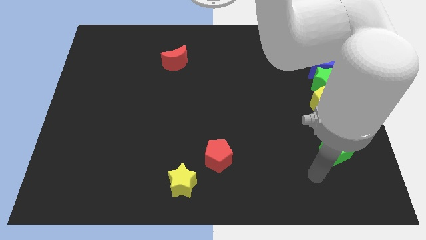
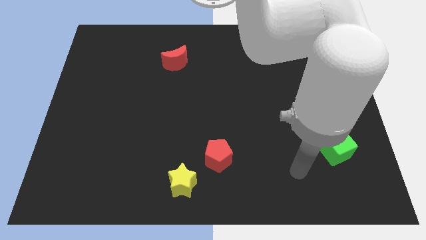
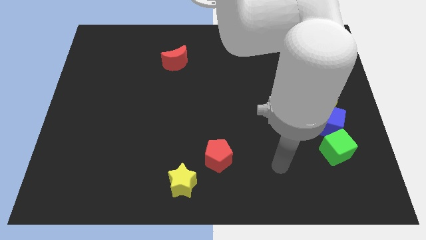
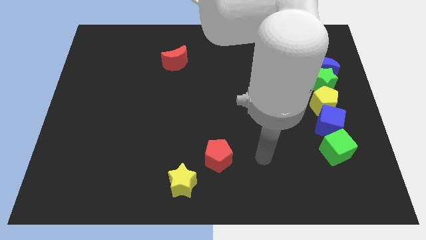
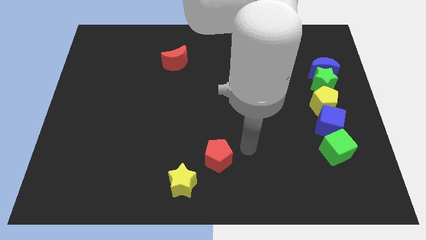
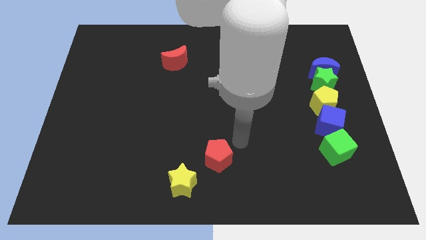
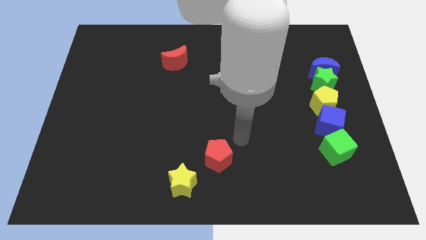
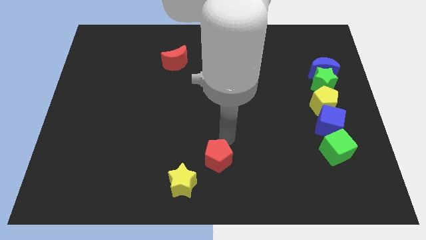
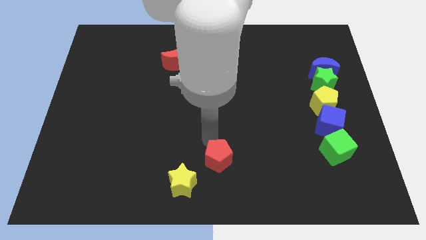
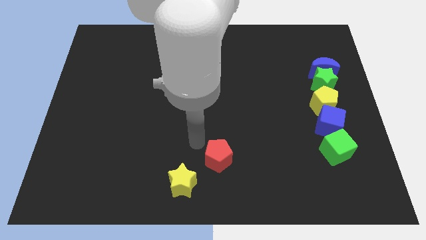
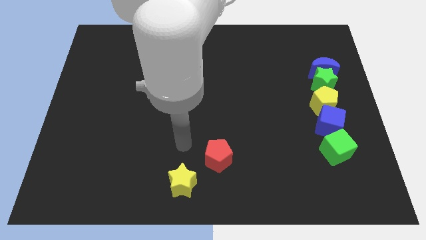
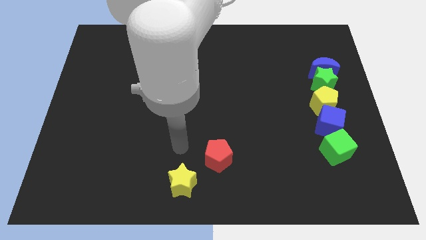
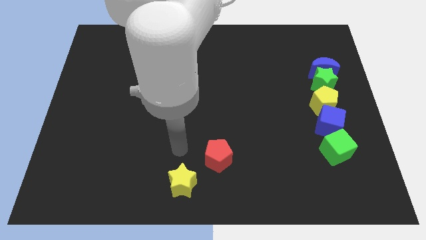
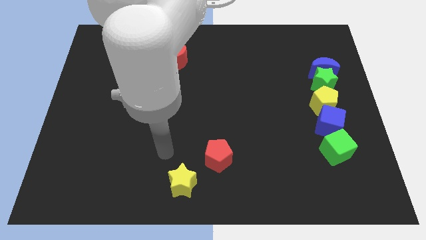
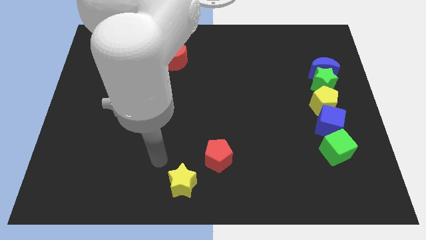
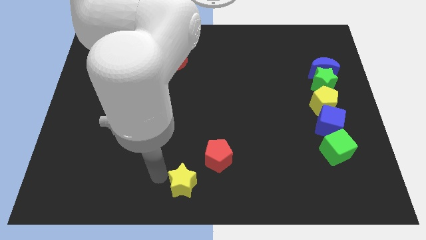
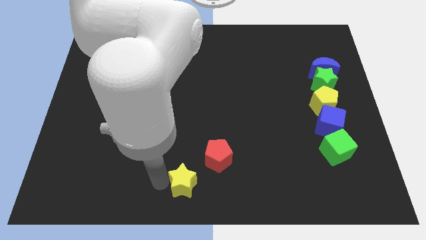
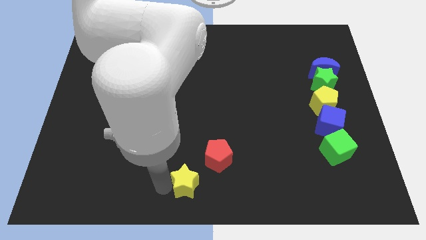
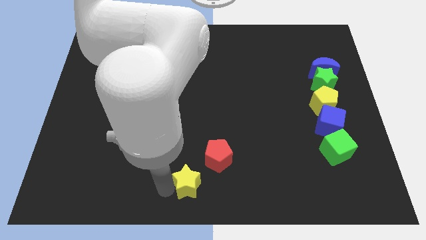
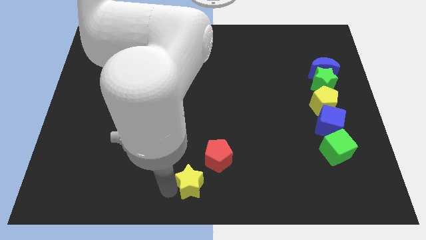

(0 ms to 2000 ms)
slide the yellow star diagonally to the red pentagon

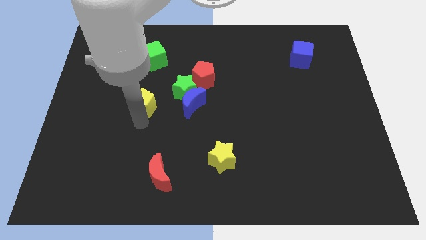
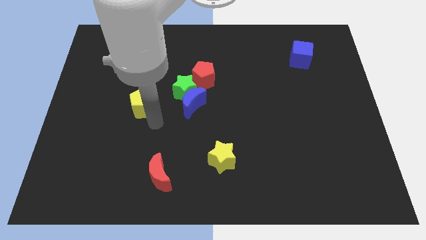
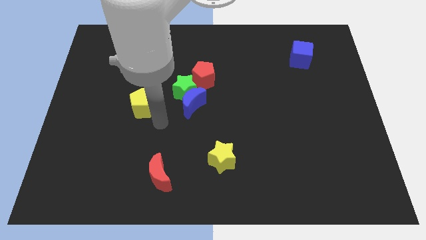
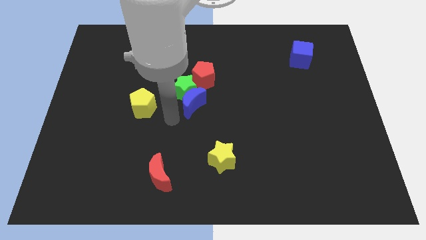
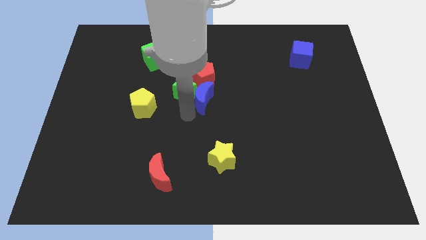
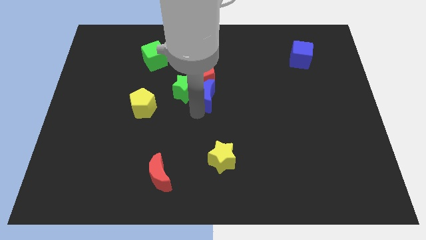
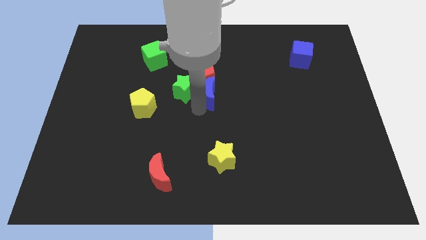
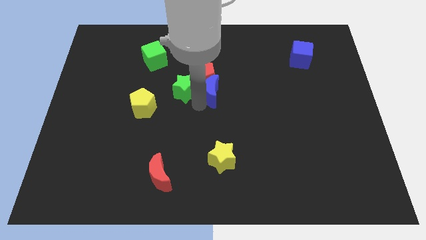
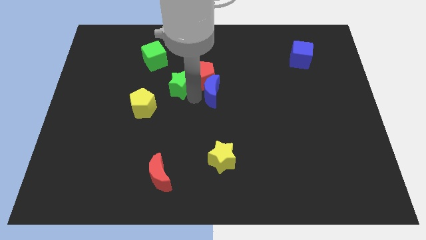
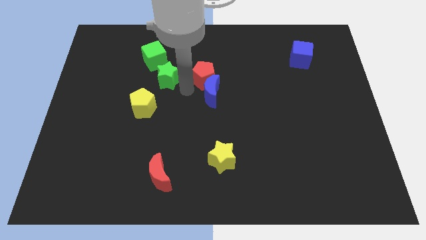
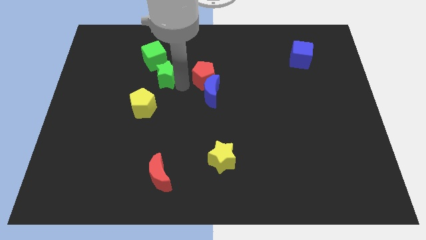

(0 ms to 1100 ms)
separate the green star and blue moon

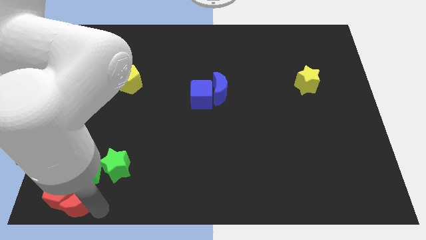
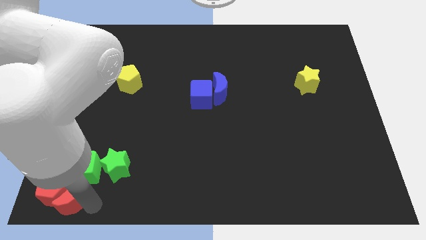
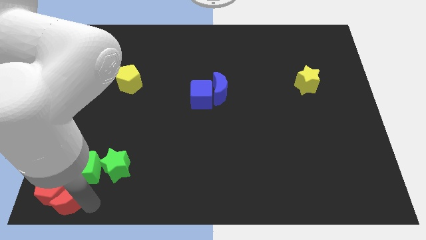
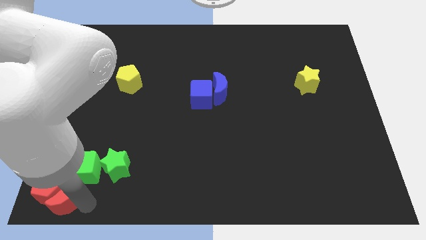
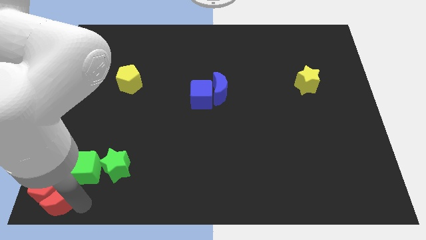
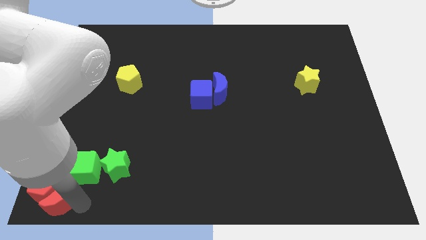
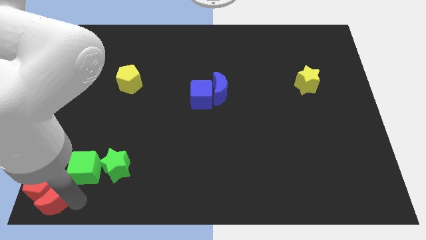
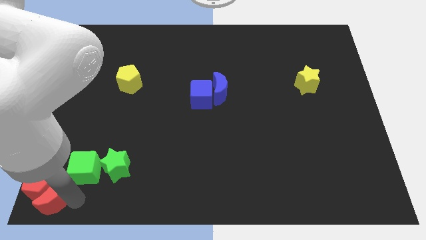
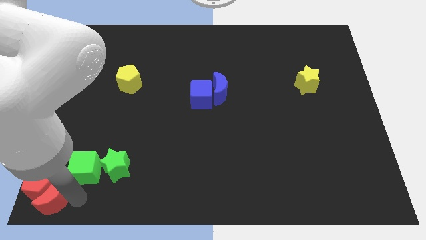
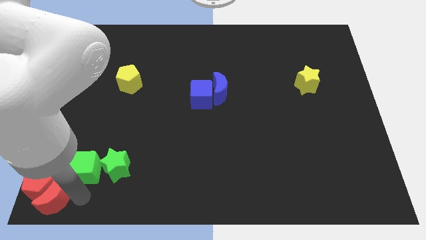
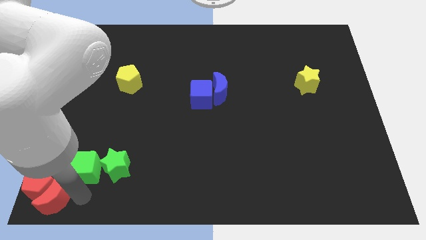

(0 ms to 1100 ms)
push the red pentagonred moon to the bottom left of the board

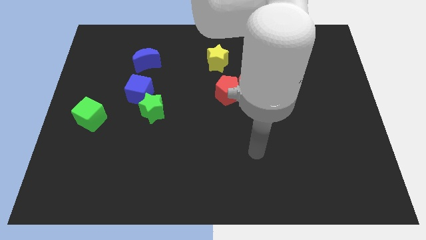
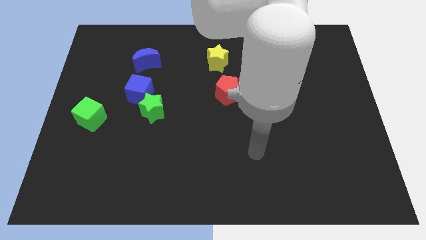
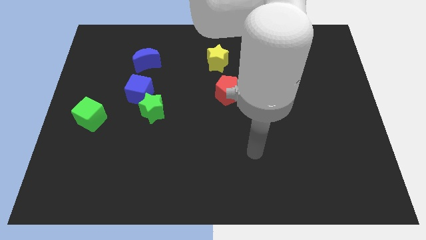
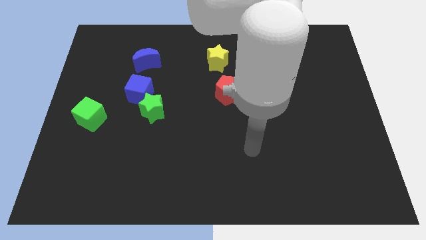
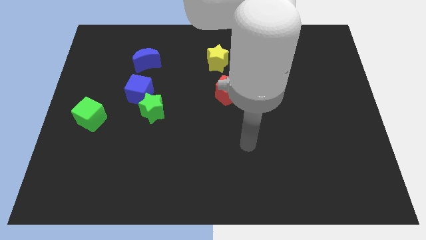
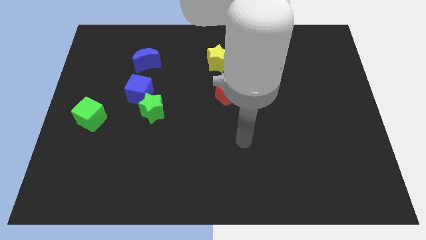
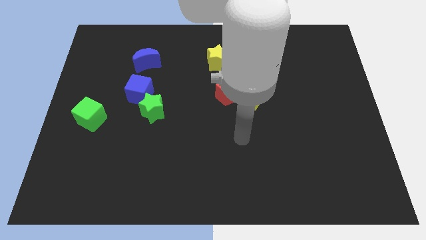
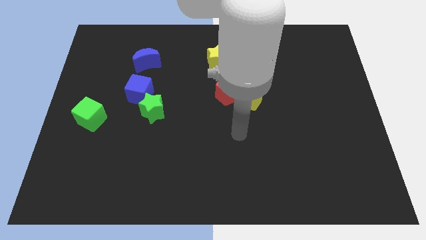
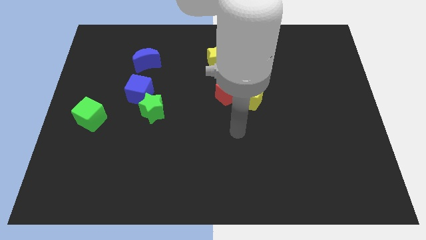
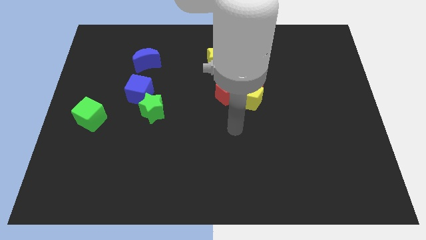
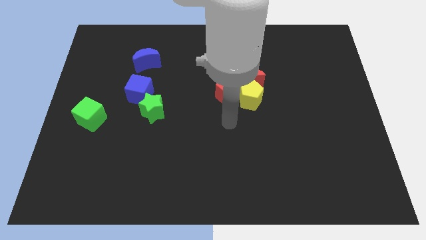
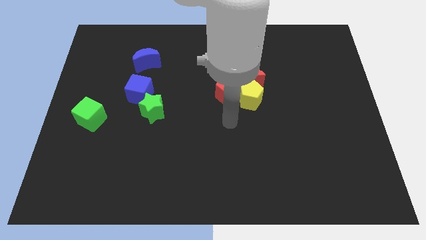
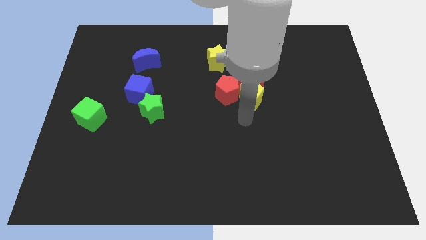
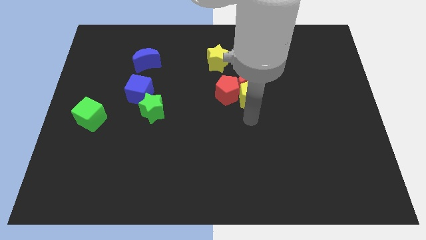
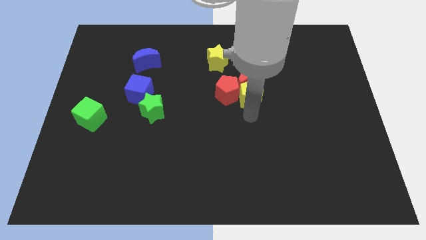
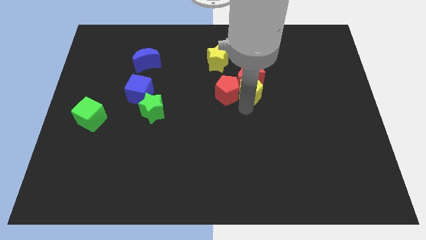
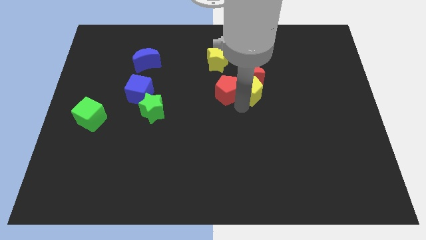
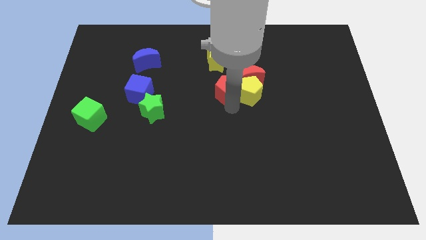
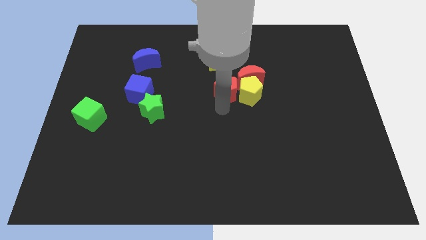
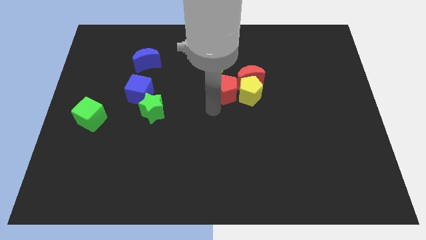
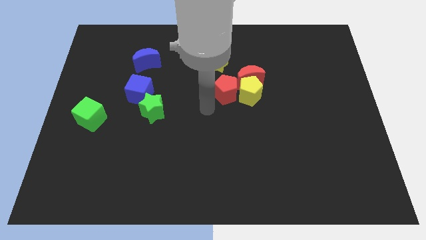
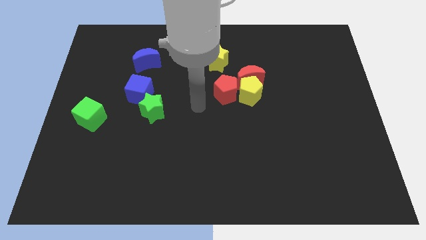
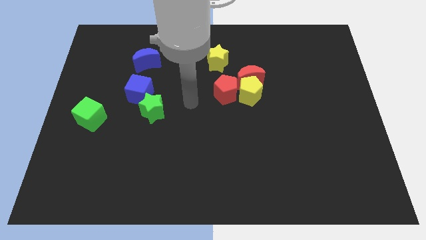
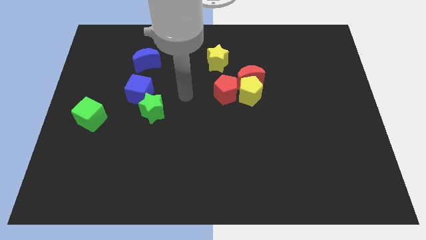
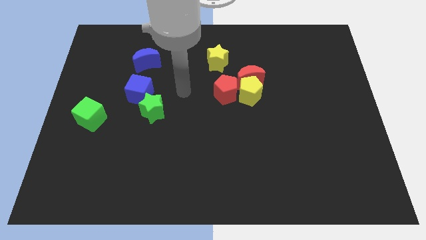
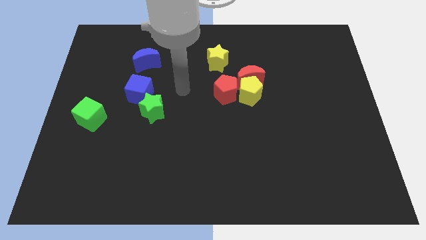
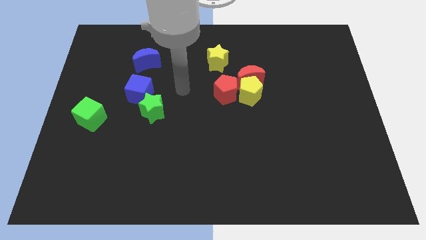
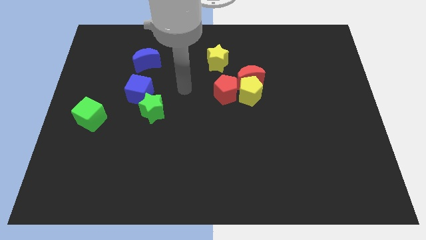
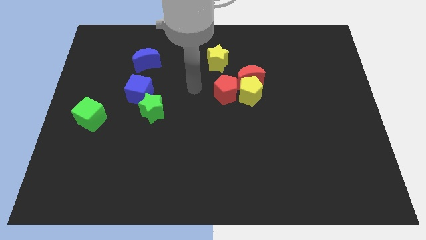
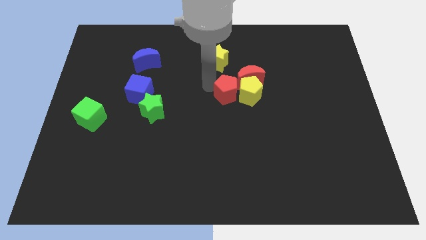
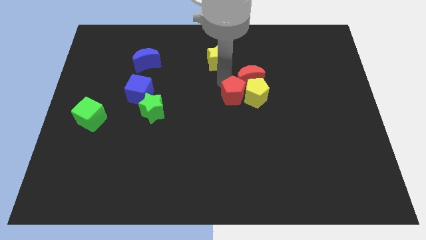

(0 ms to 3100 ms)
move the yellow pentagon slightly

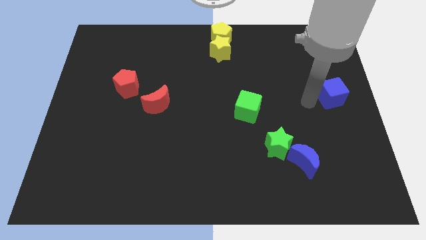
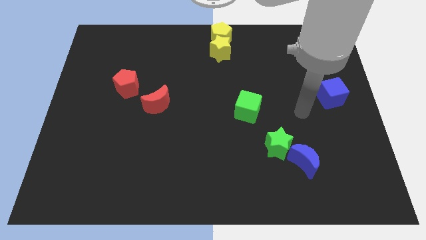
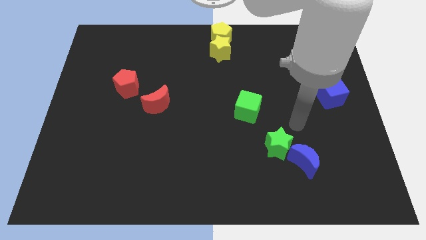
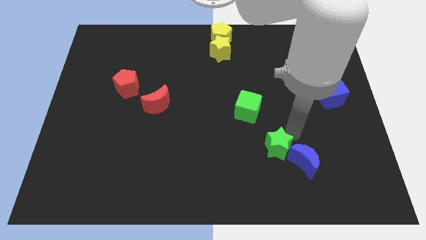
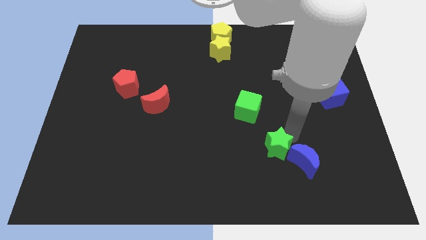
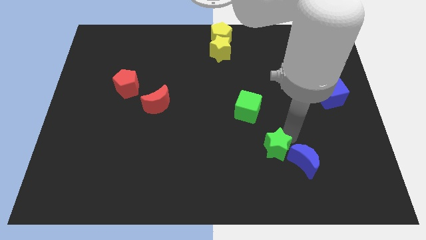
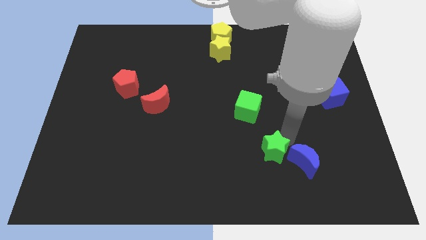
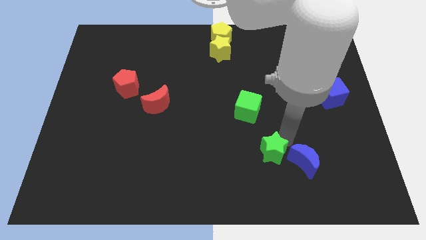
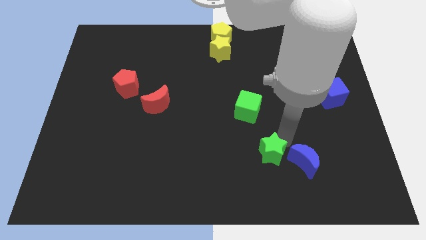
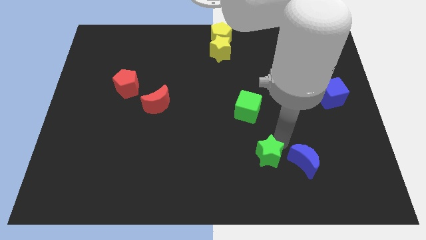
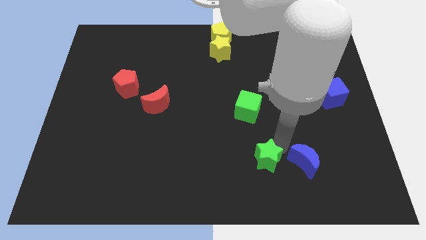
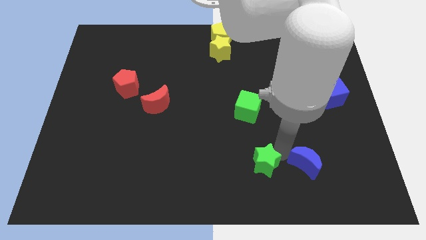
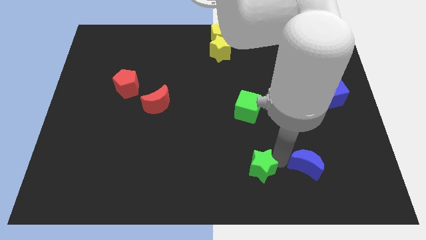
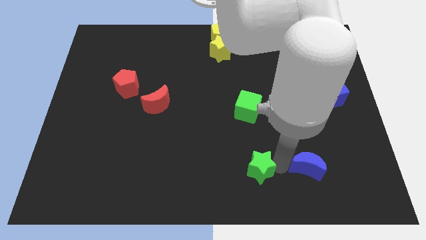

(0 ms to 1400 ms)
move the green star slightly to the bottom

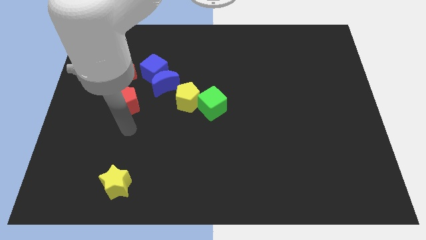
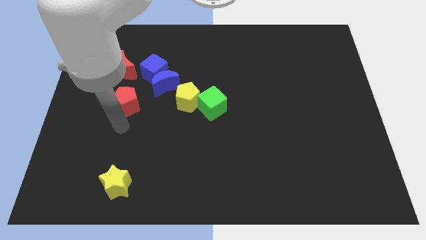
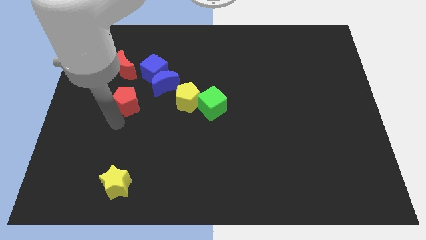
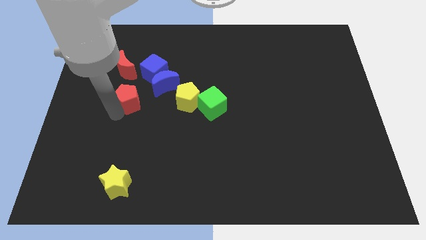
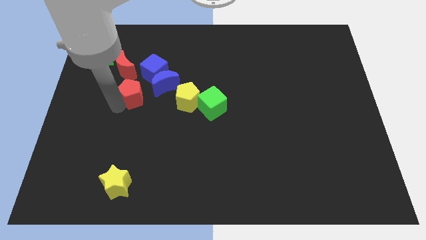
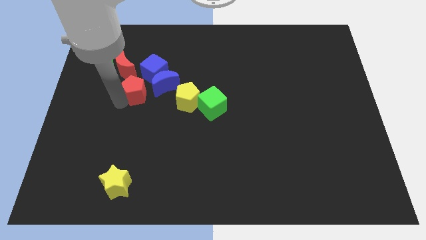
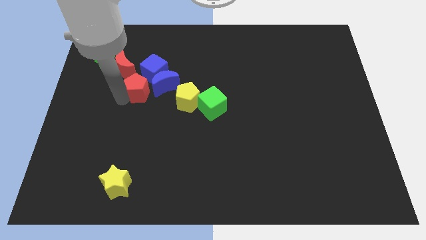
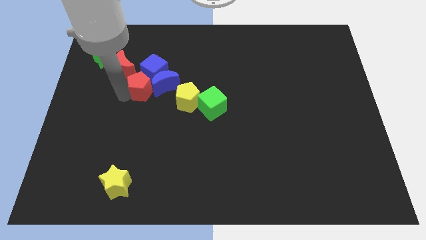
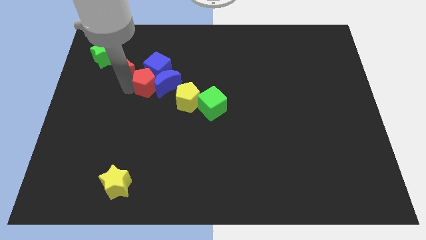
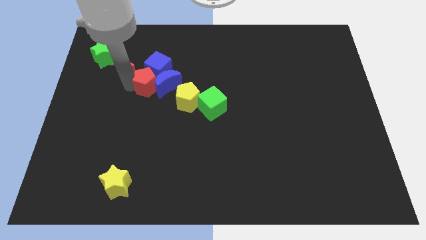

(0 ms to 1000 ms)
push the red pentagon into the blue cube
